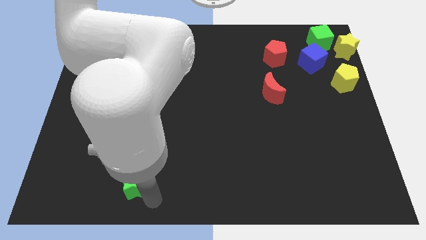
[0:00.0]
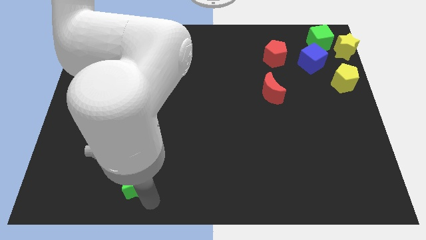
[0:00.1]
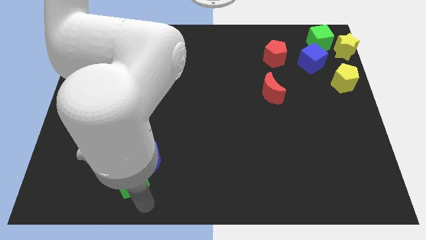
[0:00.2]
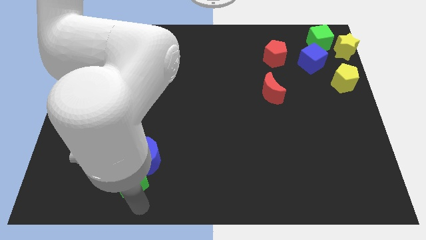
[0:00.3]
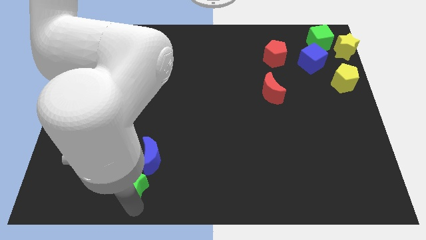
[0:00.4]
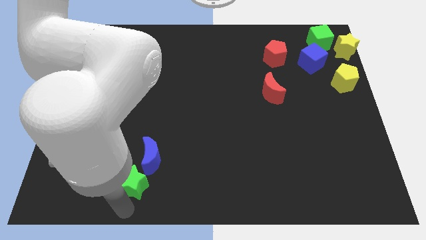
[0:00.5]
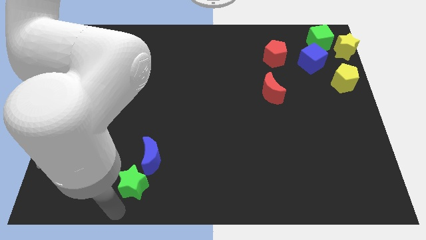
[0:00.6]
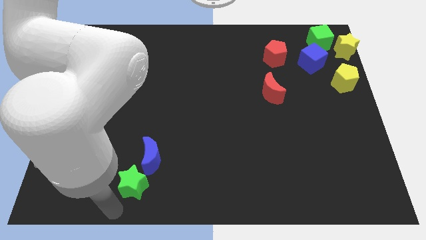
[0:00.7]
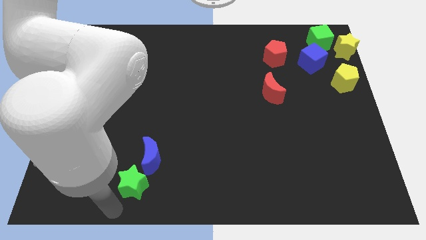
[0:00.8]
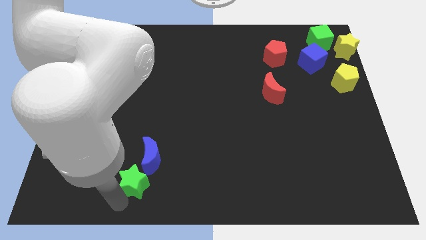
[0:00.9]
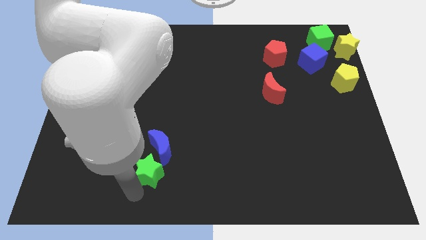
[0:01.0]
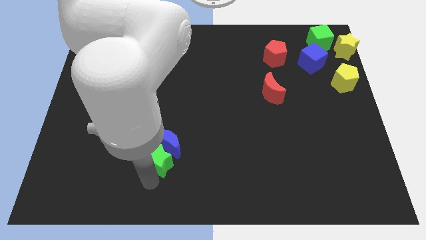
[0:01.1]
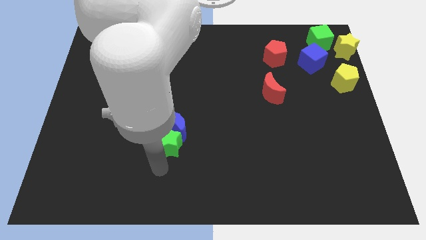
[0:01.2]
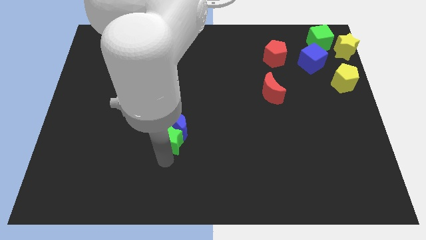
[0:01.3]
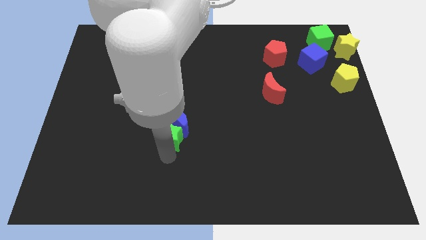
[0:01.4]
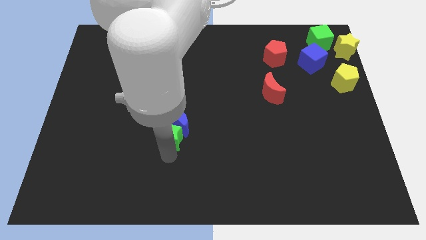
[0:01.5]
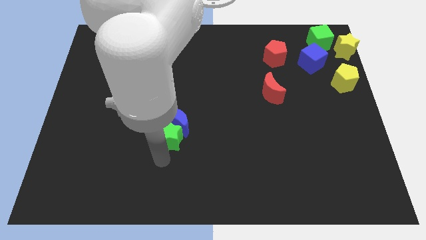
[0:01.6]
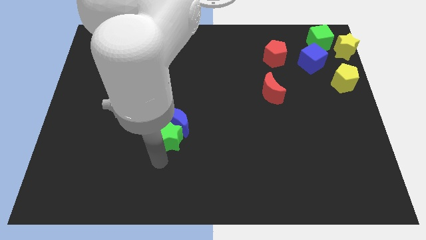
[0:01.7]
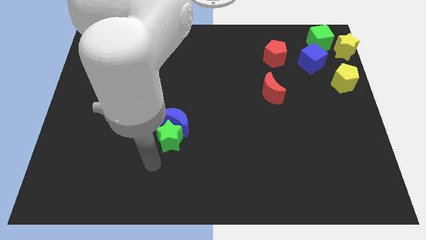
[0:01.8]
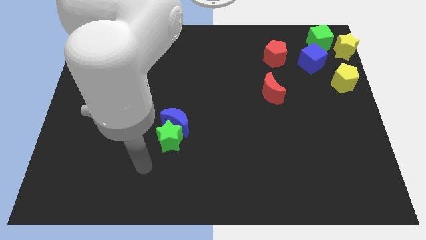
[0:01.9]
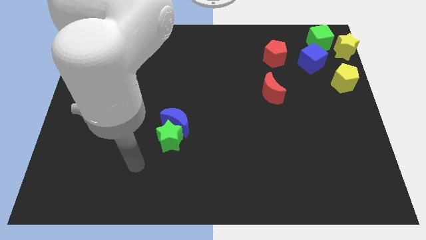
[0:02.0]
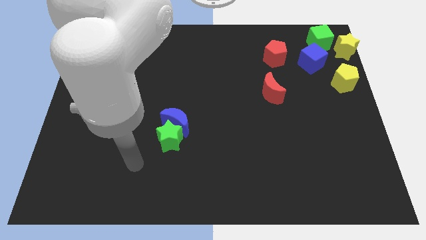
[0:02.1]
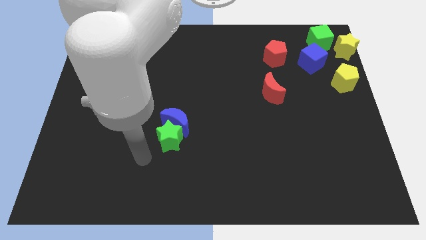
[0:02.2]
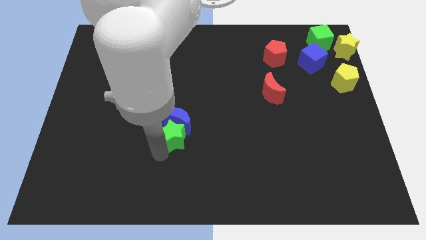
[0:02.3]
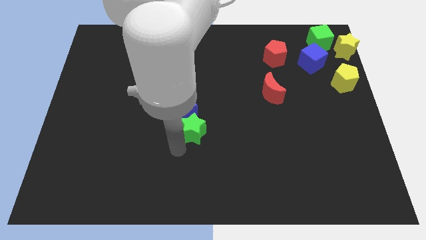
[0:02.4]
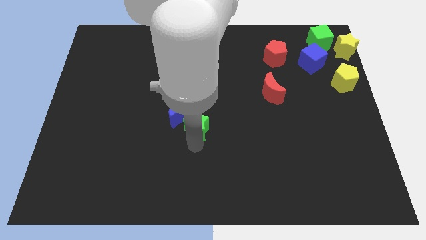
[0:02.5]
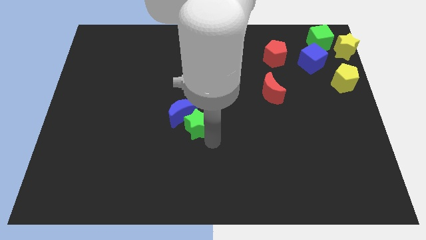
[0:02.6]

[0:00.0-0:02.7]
push the blue moon with green star

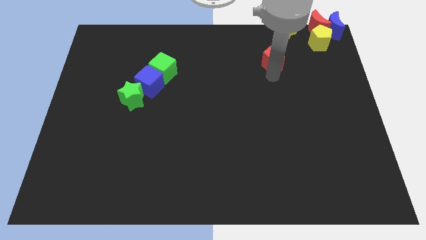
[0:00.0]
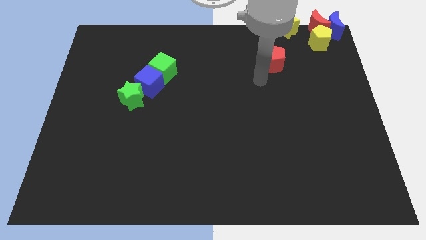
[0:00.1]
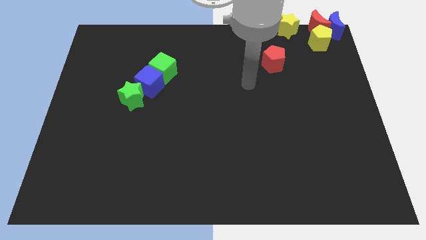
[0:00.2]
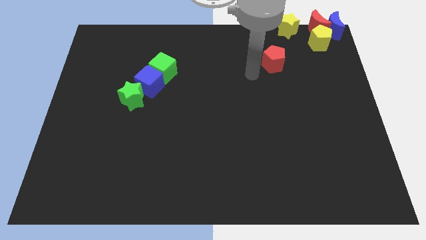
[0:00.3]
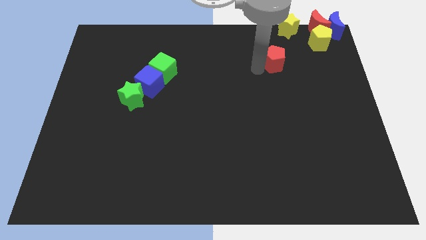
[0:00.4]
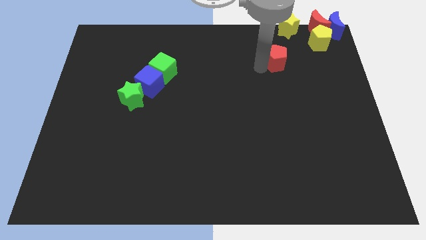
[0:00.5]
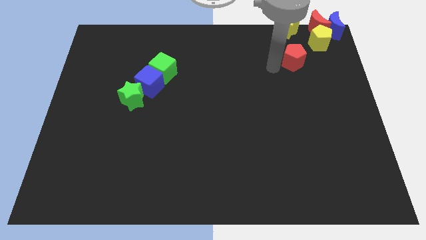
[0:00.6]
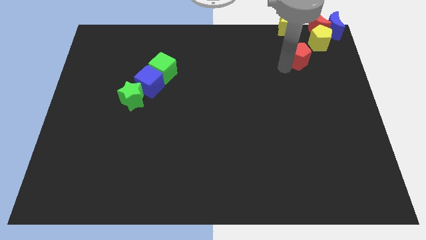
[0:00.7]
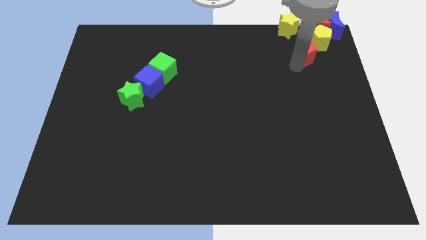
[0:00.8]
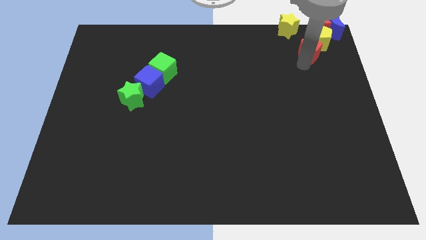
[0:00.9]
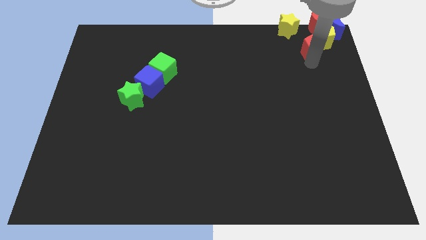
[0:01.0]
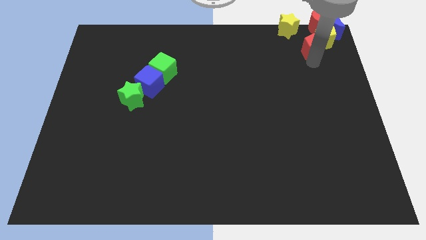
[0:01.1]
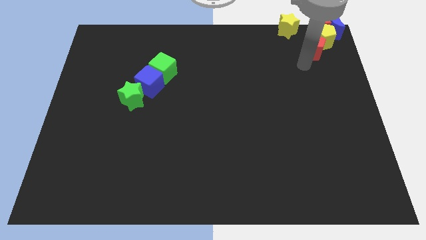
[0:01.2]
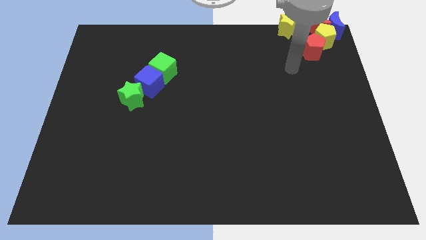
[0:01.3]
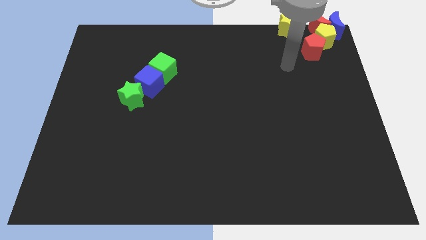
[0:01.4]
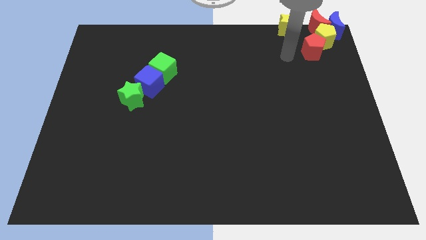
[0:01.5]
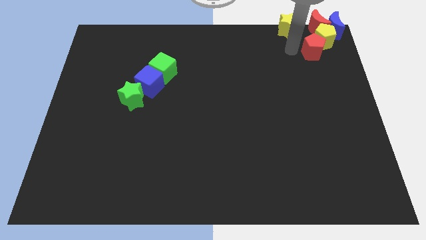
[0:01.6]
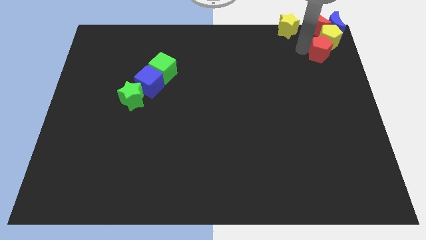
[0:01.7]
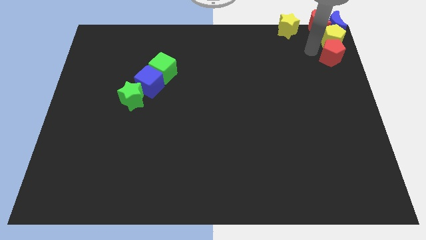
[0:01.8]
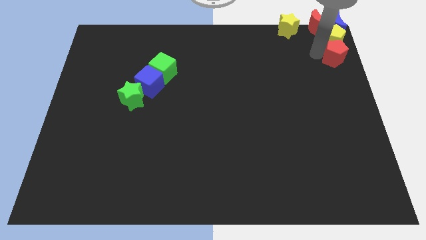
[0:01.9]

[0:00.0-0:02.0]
place the red pentagon below the yellow pentagon

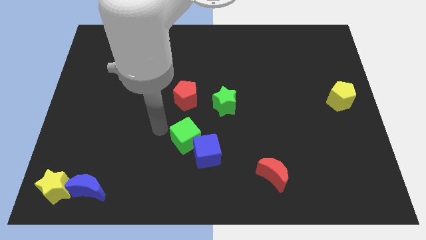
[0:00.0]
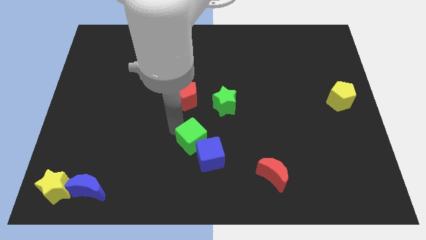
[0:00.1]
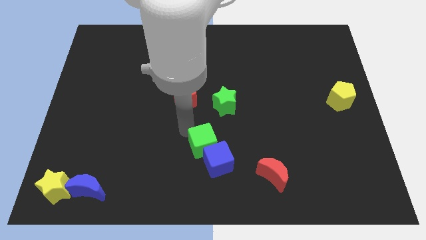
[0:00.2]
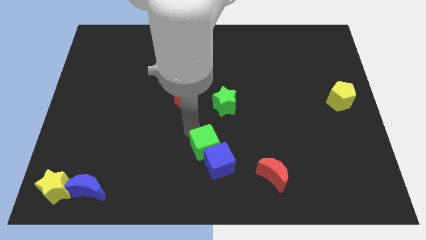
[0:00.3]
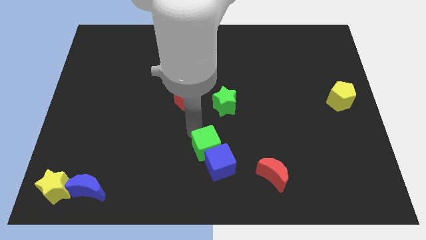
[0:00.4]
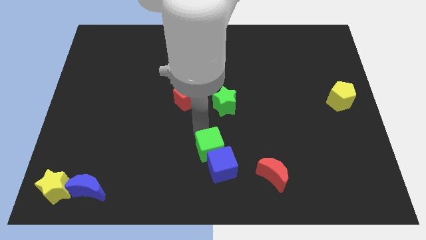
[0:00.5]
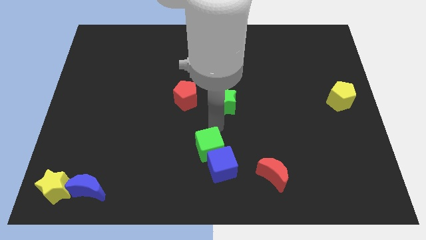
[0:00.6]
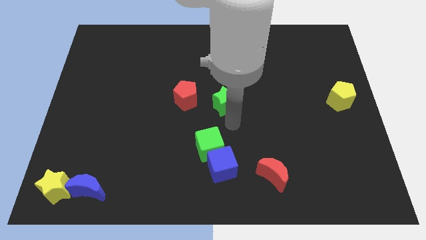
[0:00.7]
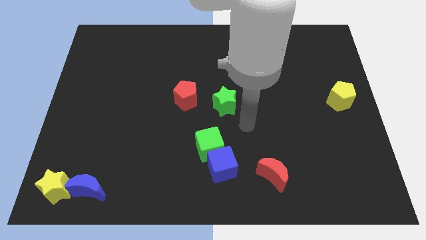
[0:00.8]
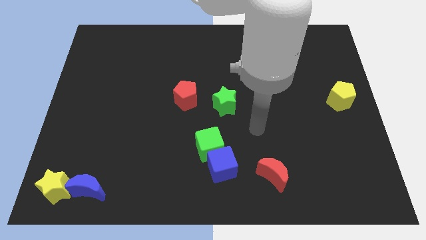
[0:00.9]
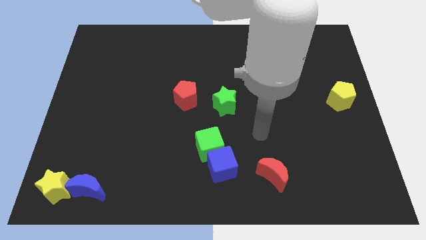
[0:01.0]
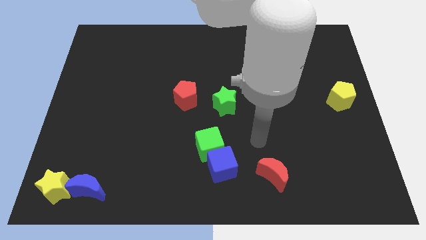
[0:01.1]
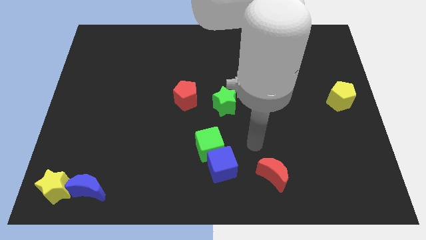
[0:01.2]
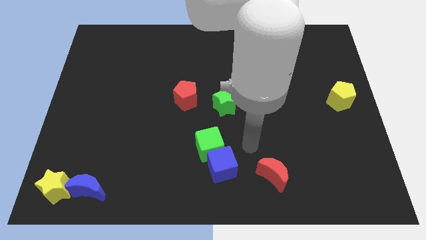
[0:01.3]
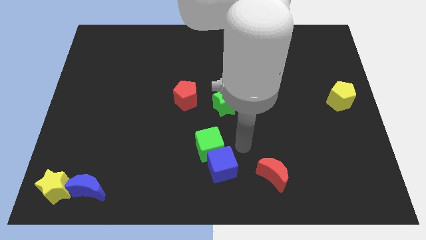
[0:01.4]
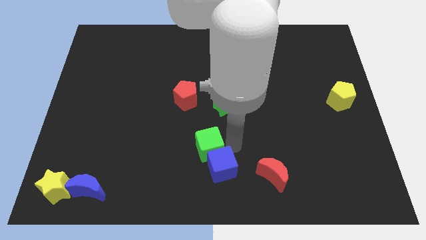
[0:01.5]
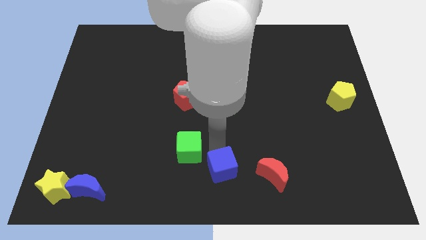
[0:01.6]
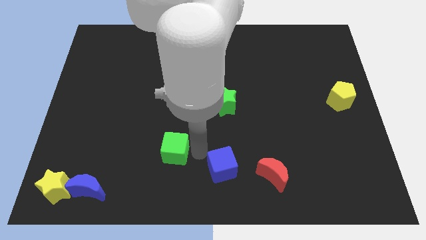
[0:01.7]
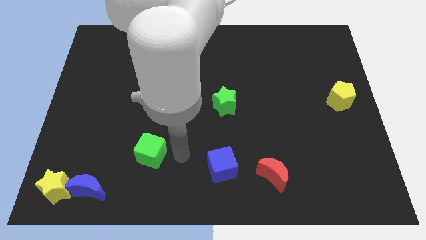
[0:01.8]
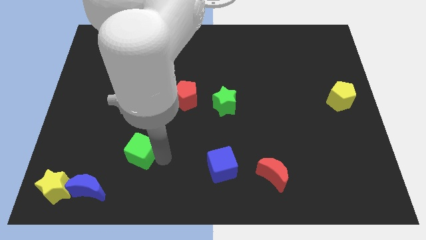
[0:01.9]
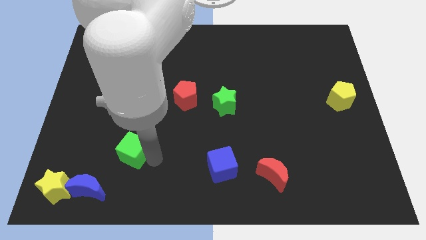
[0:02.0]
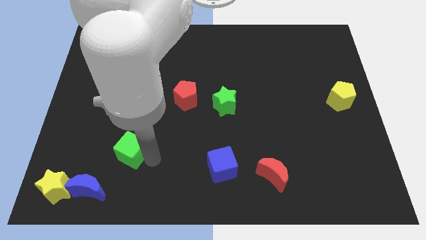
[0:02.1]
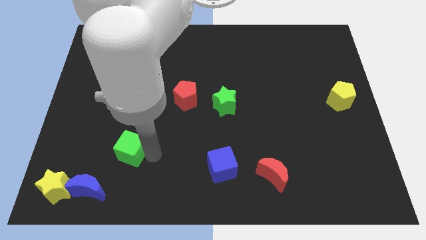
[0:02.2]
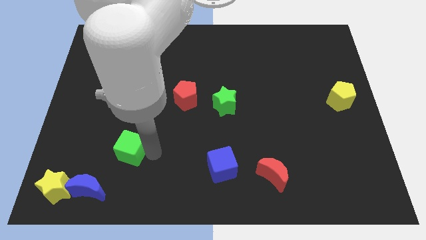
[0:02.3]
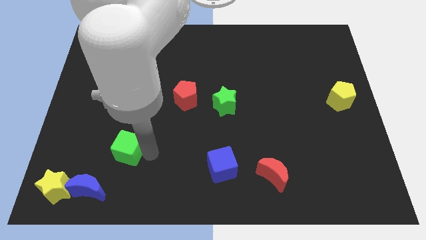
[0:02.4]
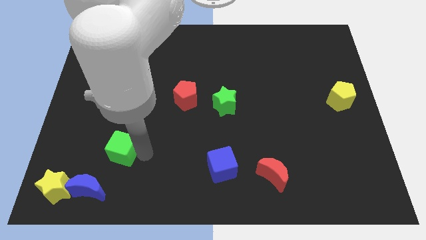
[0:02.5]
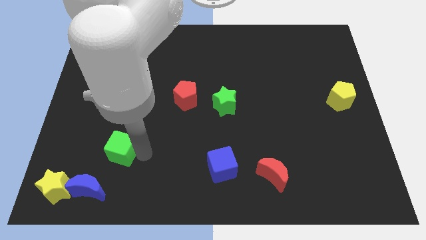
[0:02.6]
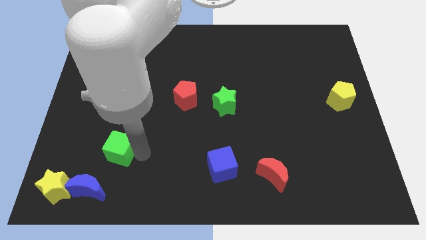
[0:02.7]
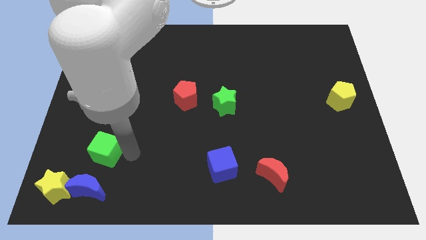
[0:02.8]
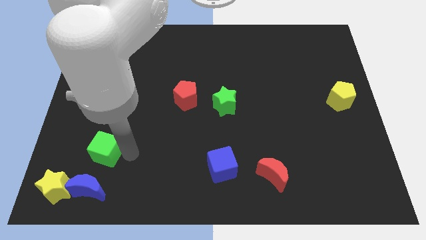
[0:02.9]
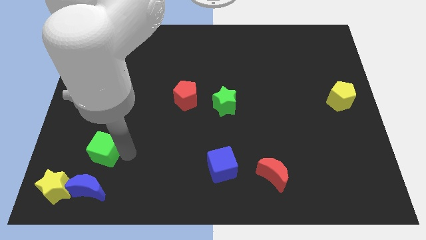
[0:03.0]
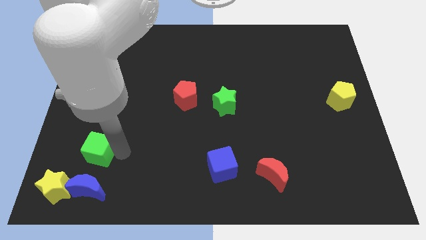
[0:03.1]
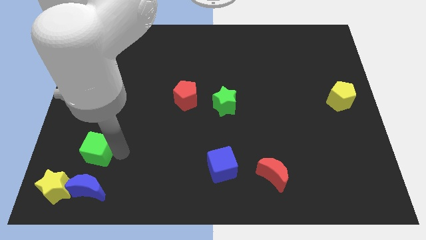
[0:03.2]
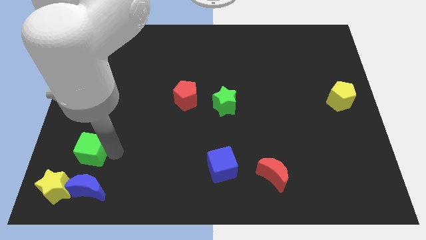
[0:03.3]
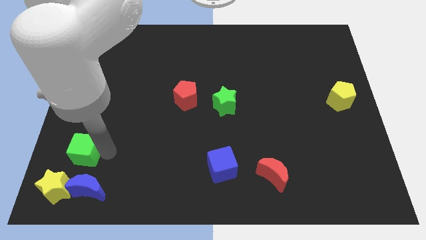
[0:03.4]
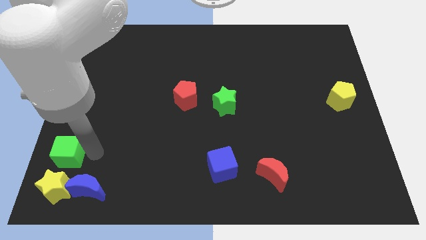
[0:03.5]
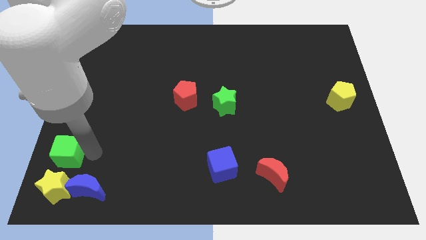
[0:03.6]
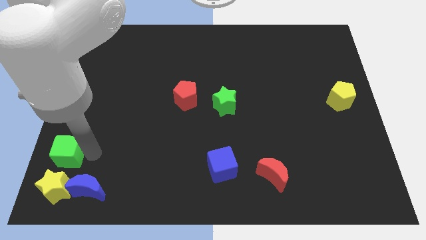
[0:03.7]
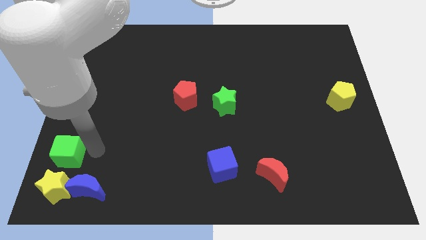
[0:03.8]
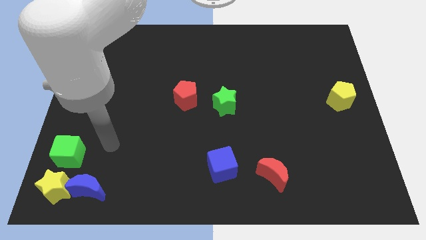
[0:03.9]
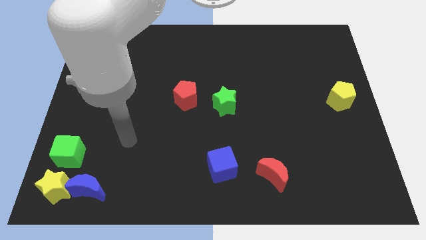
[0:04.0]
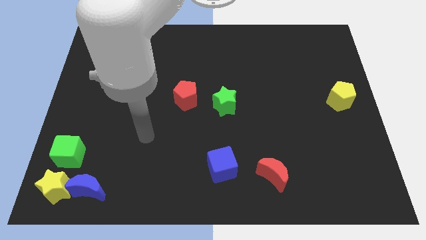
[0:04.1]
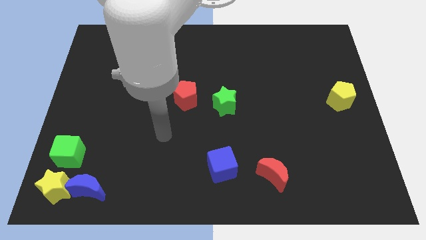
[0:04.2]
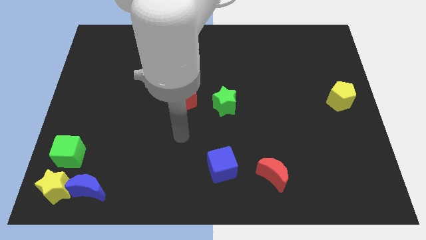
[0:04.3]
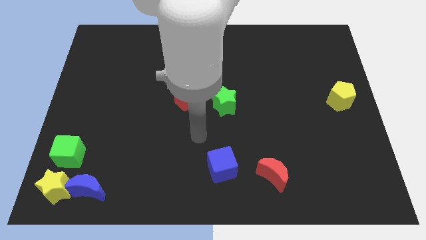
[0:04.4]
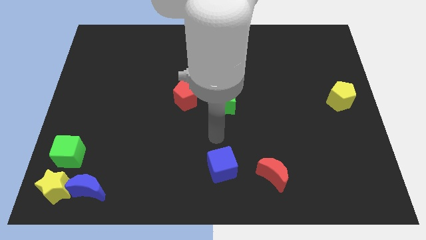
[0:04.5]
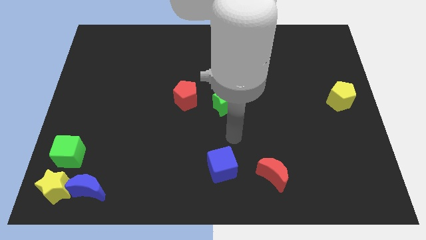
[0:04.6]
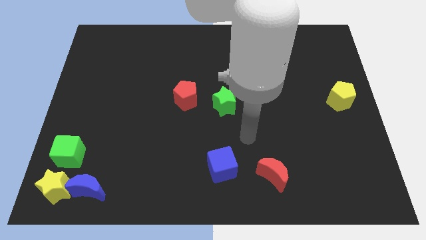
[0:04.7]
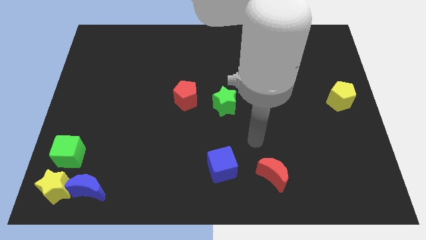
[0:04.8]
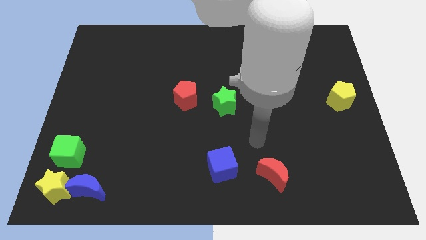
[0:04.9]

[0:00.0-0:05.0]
place the green cube above the yellow star
